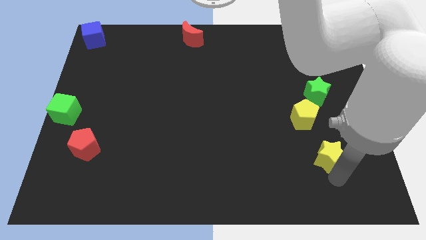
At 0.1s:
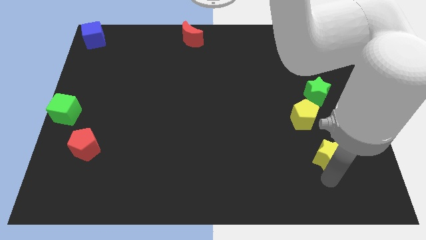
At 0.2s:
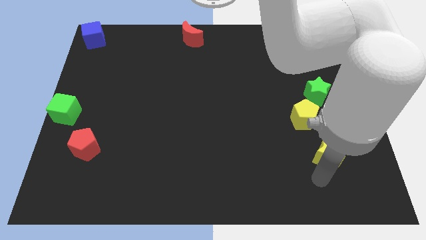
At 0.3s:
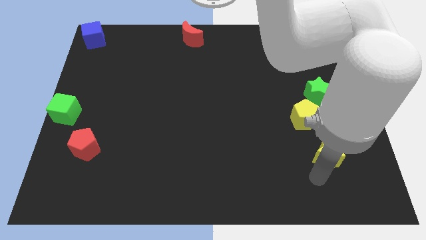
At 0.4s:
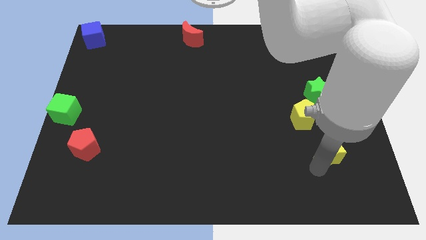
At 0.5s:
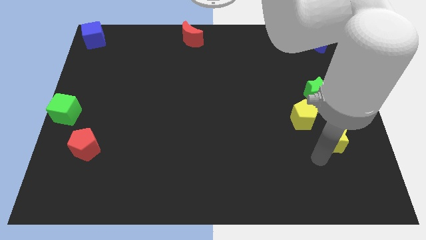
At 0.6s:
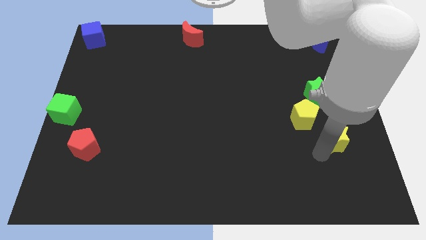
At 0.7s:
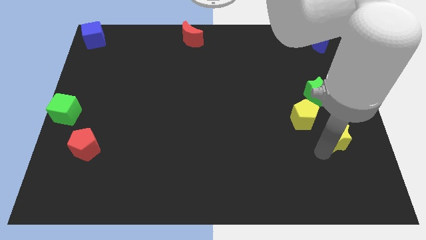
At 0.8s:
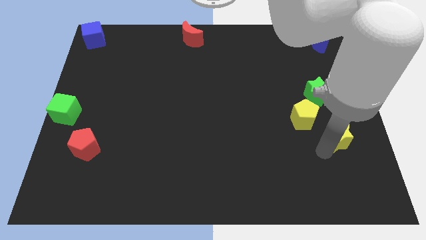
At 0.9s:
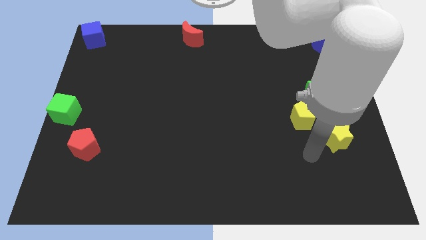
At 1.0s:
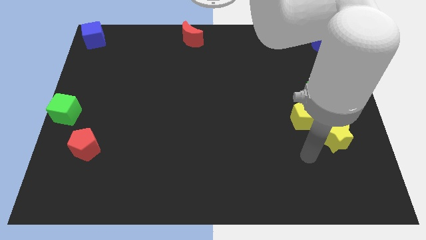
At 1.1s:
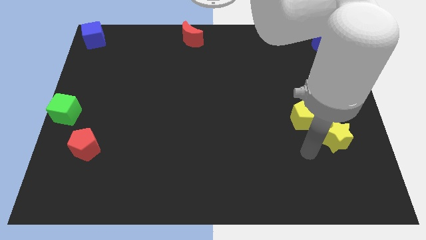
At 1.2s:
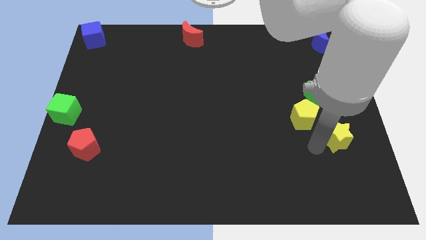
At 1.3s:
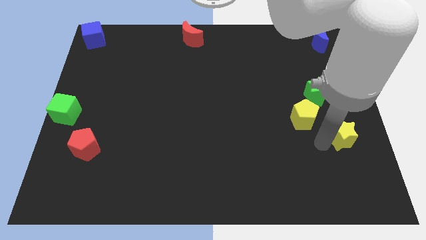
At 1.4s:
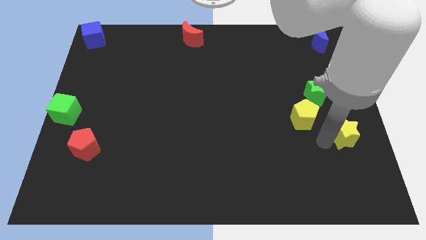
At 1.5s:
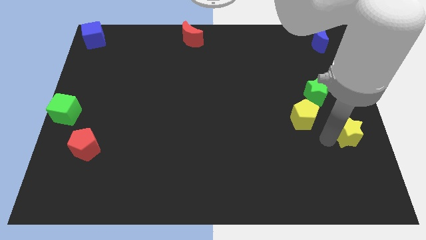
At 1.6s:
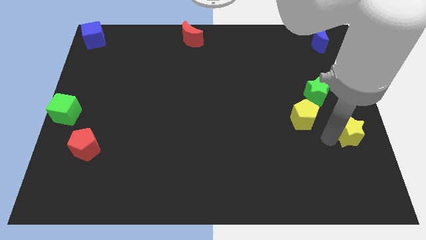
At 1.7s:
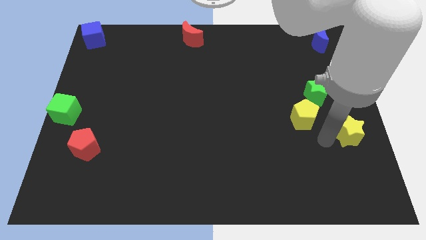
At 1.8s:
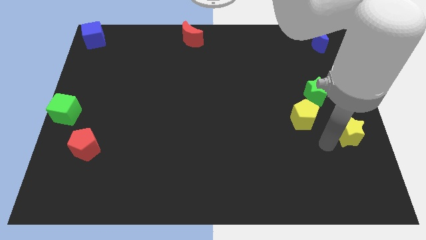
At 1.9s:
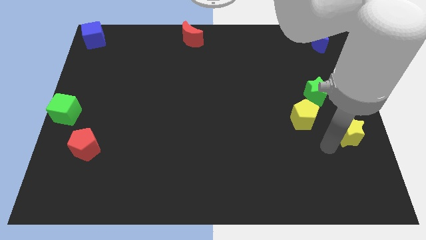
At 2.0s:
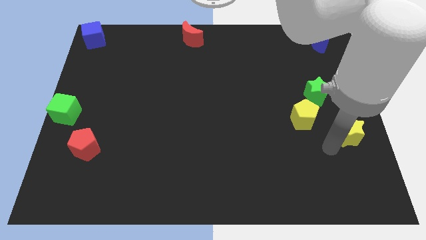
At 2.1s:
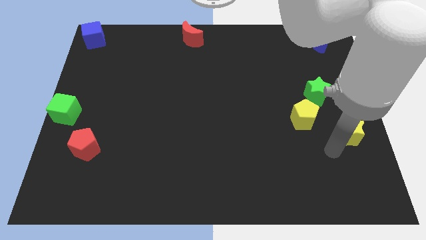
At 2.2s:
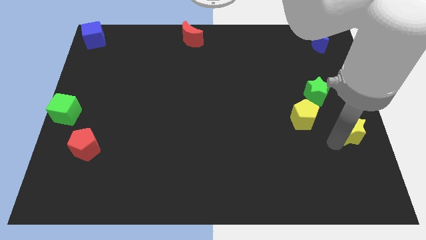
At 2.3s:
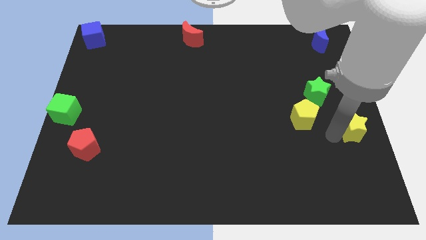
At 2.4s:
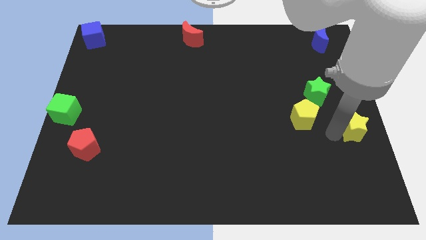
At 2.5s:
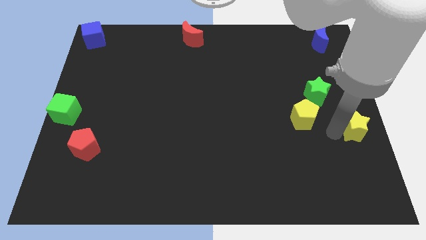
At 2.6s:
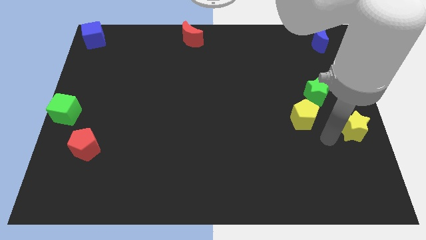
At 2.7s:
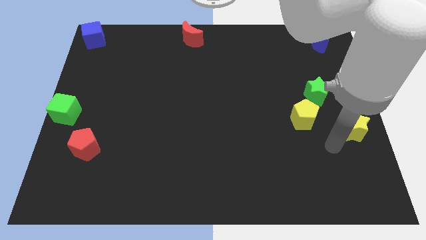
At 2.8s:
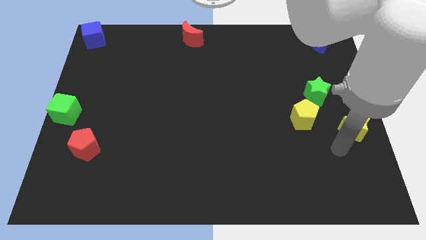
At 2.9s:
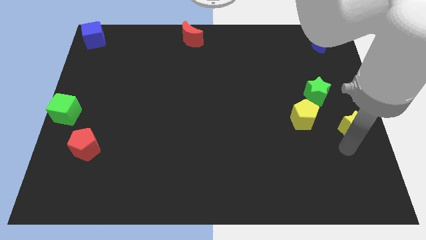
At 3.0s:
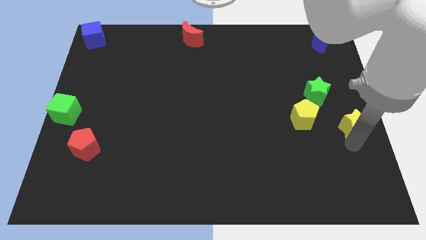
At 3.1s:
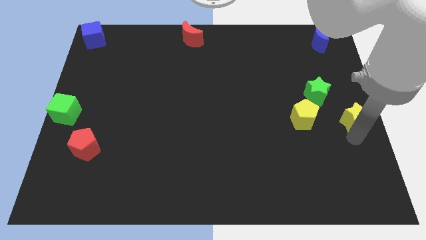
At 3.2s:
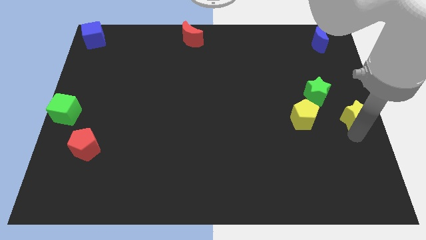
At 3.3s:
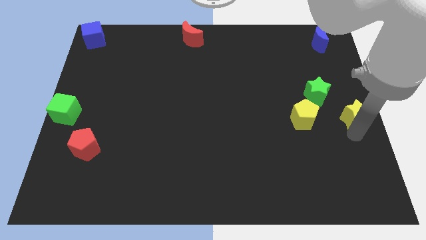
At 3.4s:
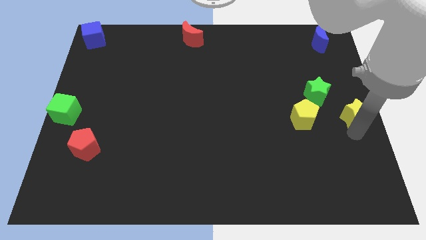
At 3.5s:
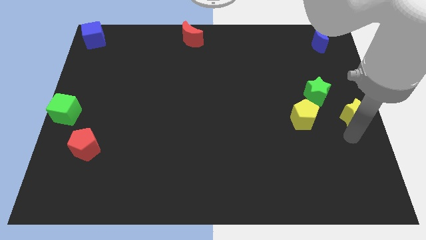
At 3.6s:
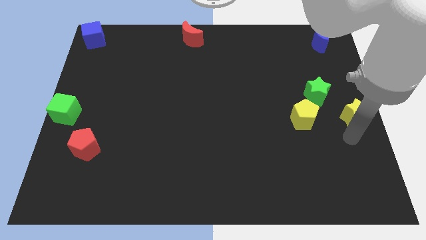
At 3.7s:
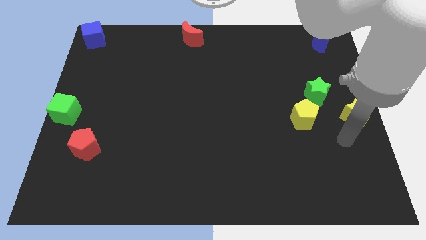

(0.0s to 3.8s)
place the yellow star to the center right of the board

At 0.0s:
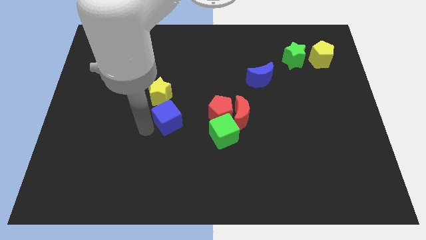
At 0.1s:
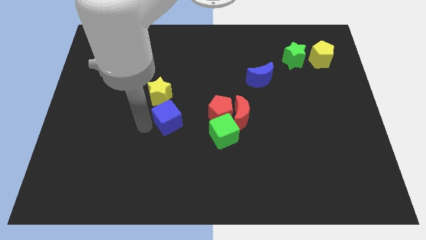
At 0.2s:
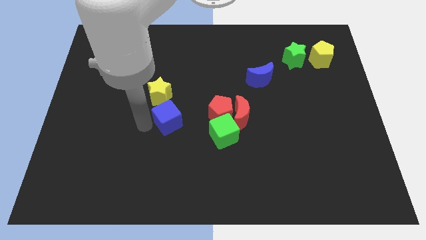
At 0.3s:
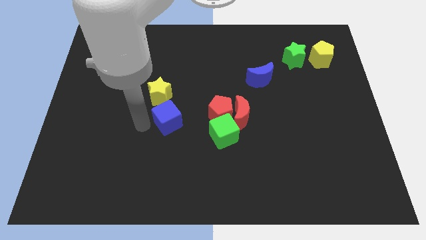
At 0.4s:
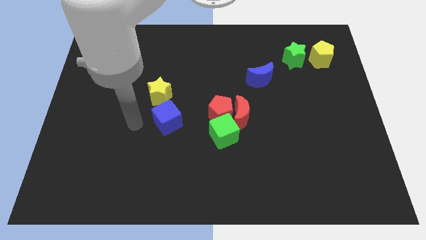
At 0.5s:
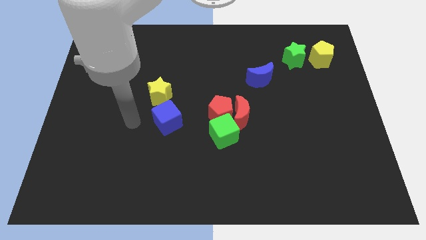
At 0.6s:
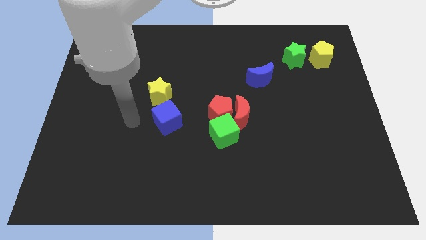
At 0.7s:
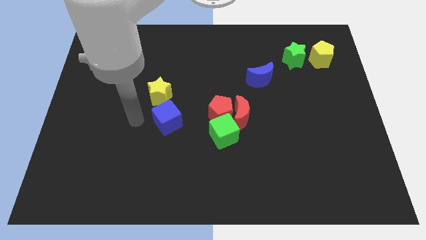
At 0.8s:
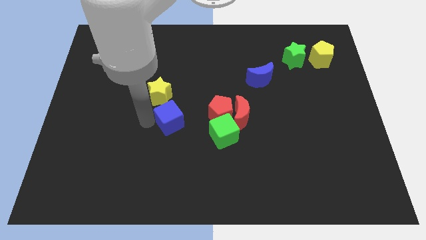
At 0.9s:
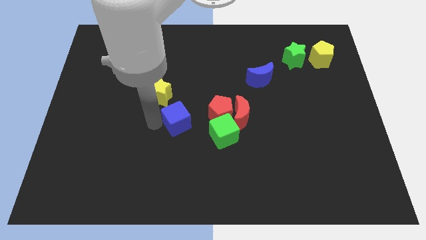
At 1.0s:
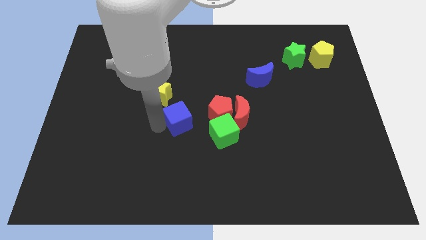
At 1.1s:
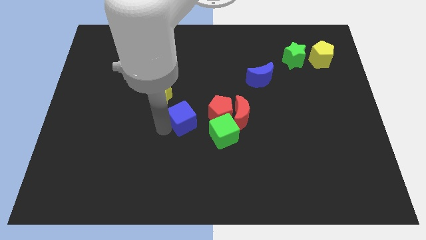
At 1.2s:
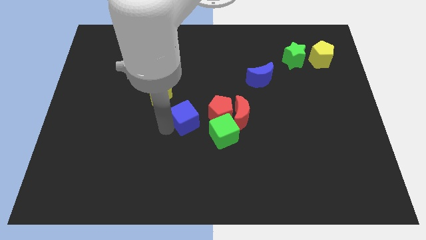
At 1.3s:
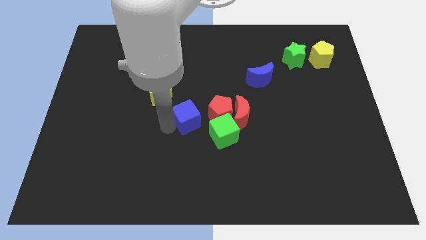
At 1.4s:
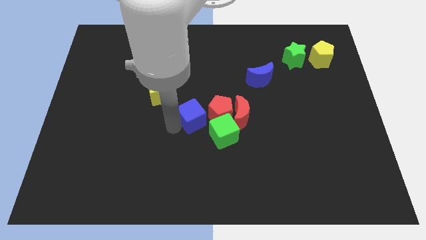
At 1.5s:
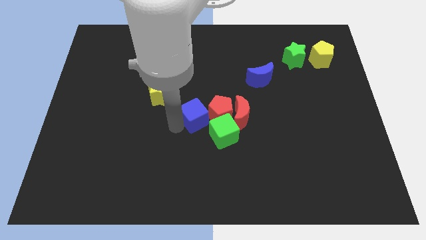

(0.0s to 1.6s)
move the blue cube left to red pentagon

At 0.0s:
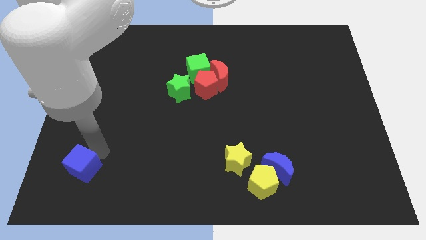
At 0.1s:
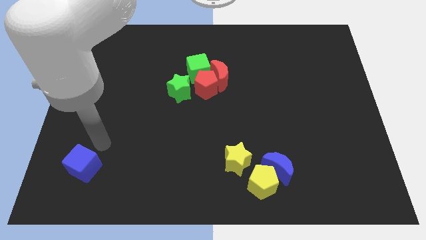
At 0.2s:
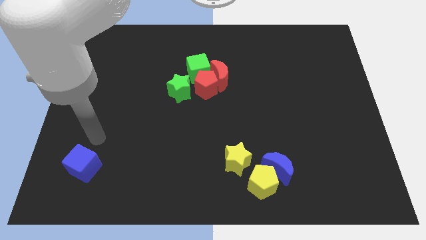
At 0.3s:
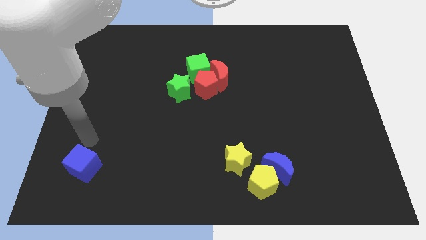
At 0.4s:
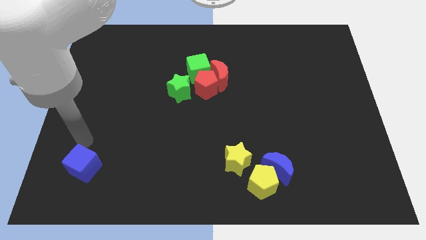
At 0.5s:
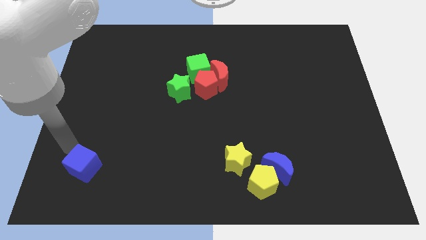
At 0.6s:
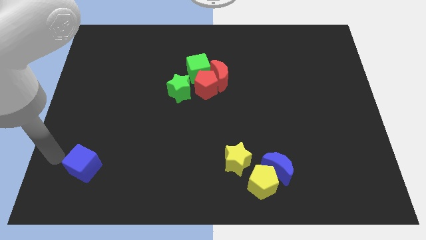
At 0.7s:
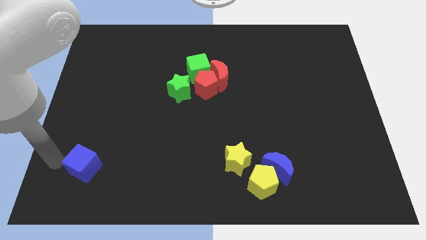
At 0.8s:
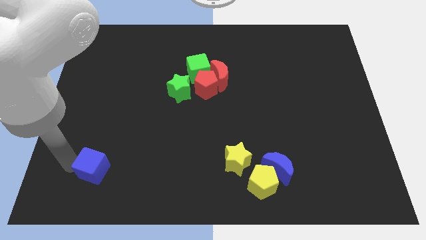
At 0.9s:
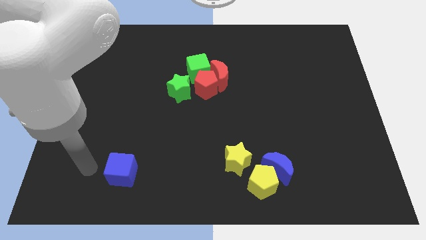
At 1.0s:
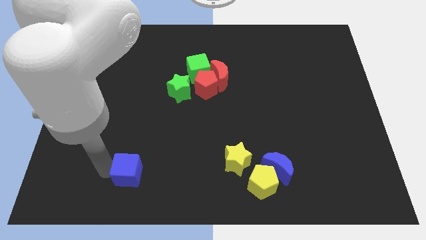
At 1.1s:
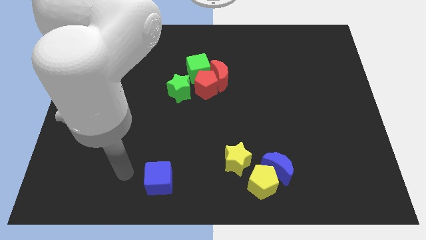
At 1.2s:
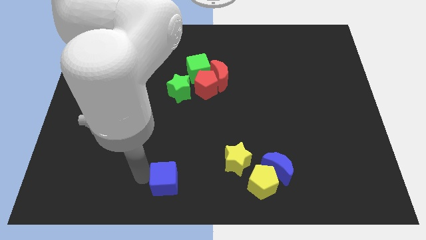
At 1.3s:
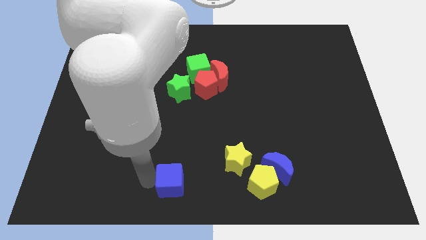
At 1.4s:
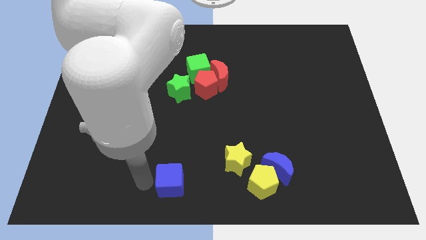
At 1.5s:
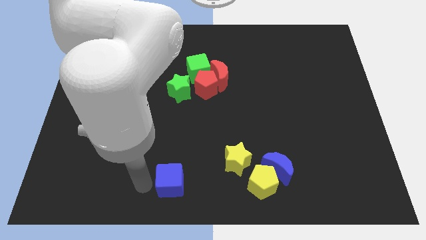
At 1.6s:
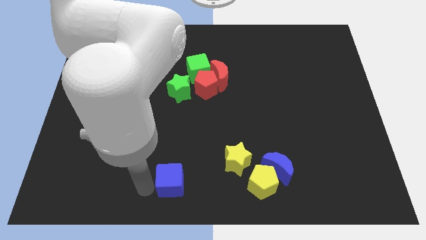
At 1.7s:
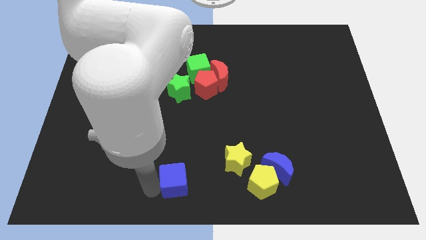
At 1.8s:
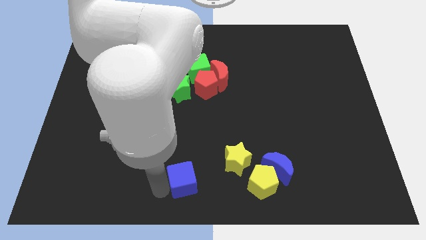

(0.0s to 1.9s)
place the blue cube to the left side of yellow star

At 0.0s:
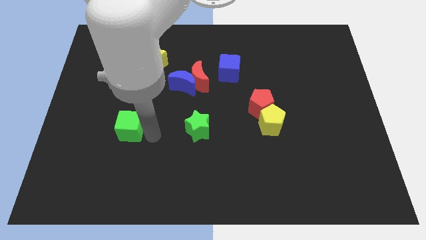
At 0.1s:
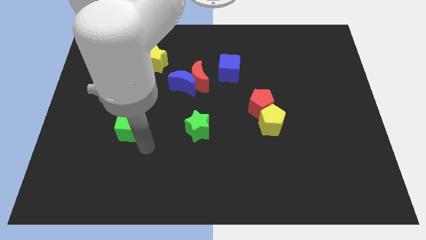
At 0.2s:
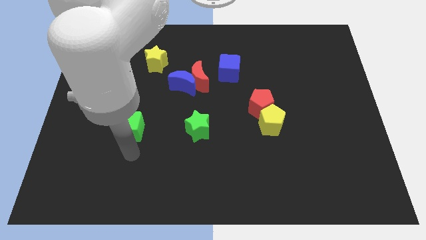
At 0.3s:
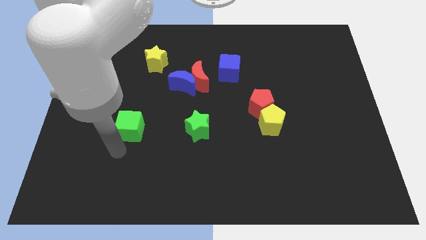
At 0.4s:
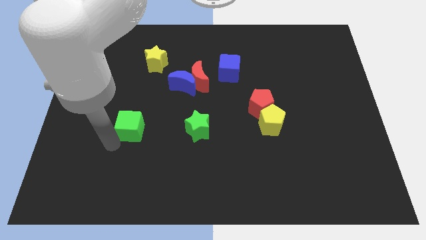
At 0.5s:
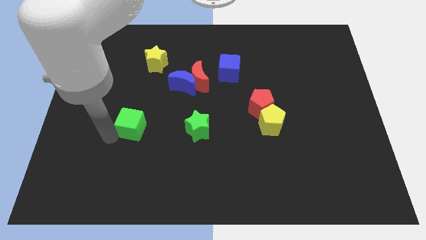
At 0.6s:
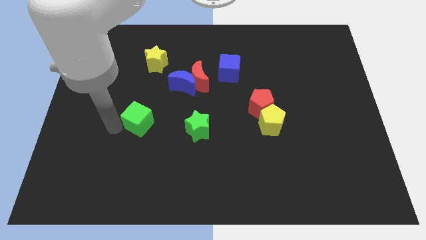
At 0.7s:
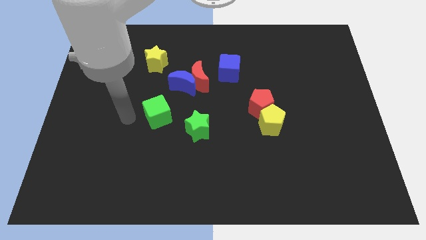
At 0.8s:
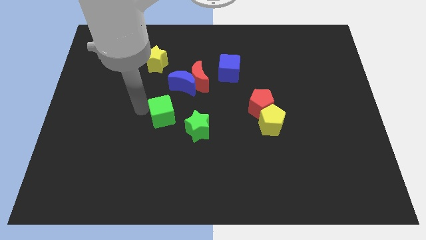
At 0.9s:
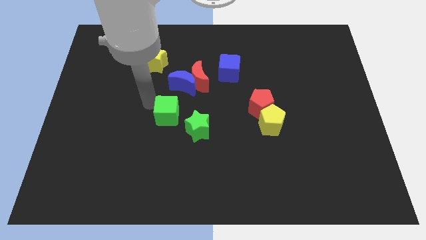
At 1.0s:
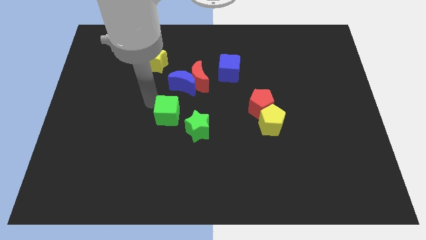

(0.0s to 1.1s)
slide green cube to the top left of green star

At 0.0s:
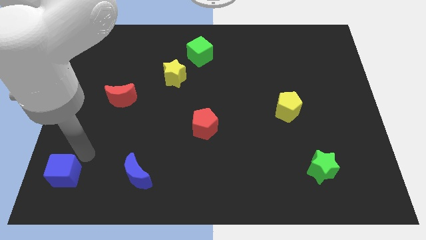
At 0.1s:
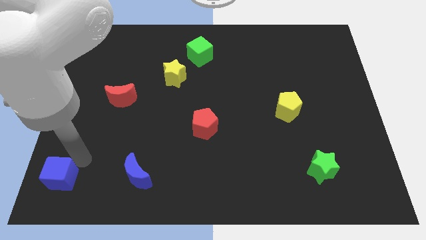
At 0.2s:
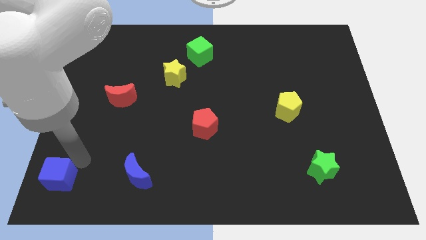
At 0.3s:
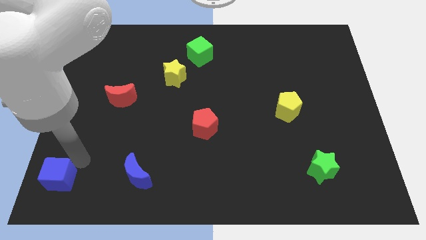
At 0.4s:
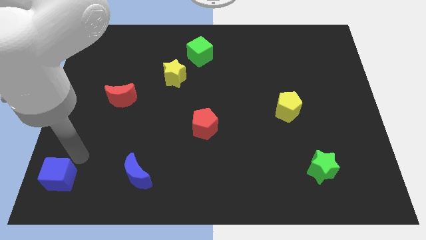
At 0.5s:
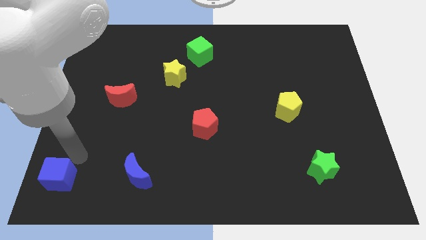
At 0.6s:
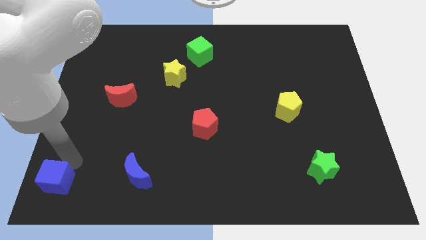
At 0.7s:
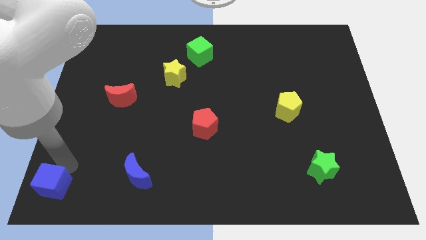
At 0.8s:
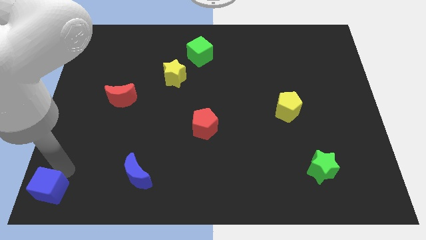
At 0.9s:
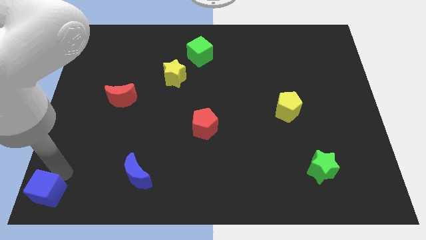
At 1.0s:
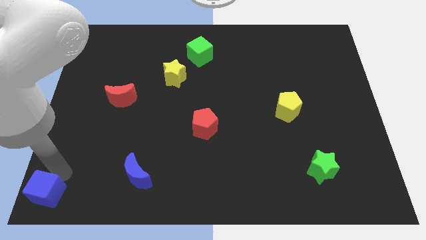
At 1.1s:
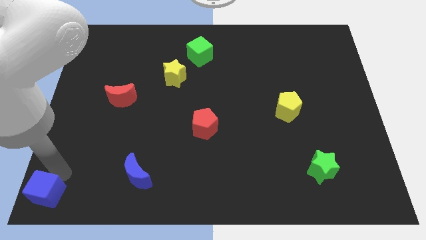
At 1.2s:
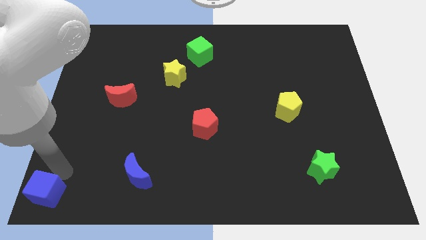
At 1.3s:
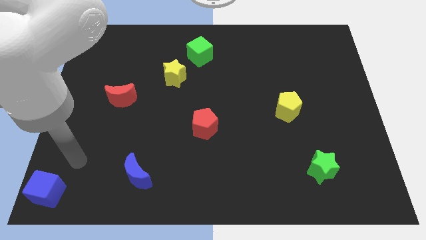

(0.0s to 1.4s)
move the blue cube to the bottom left corner of the board
